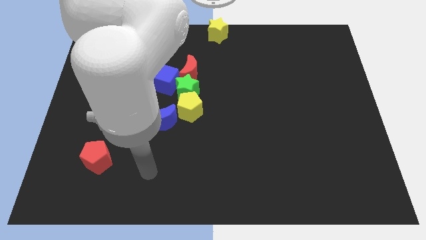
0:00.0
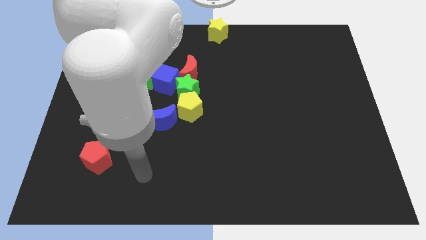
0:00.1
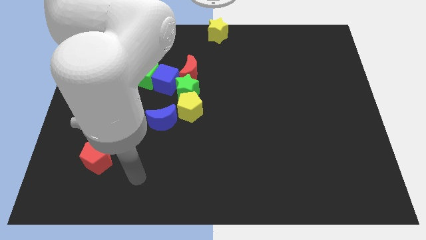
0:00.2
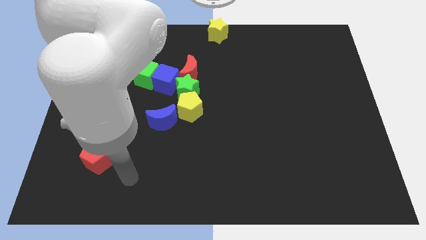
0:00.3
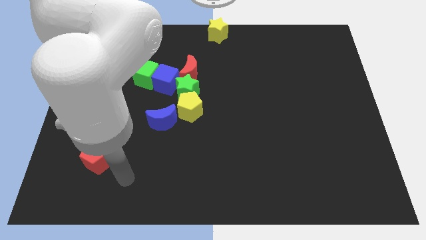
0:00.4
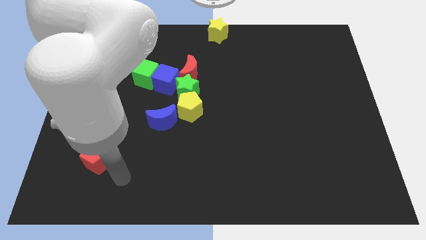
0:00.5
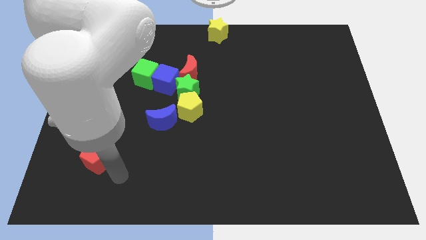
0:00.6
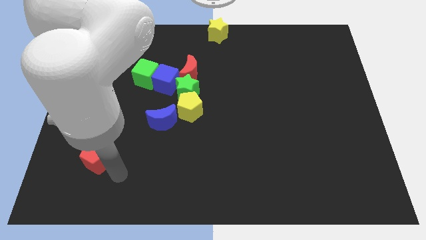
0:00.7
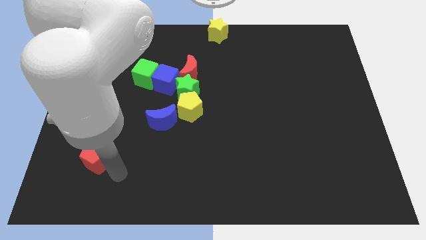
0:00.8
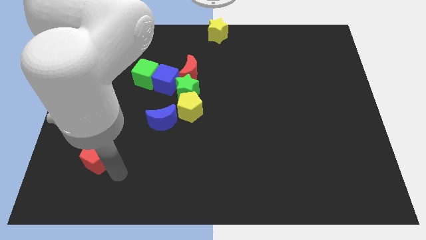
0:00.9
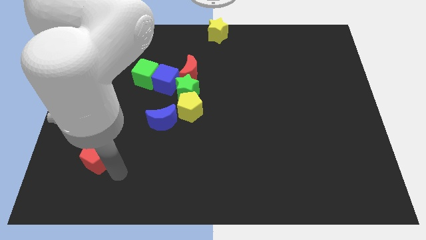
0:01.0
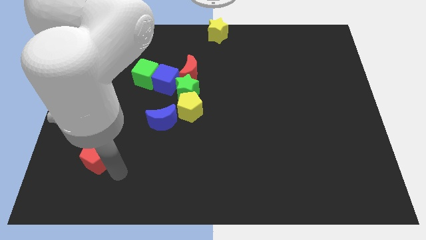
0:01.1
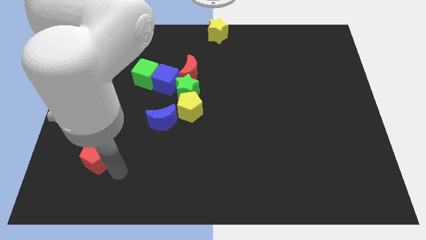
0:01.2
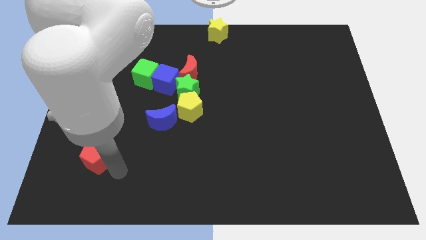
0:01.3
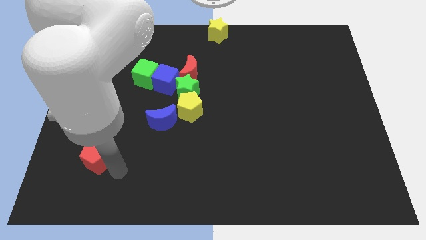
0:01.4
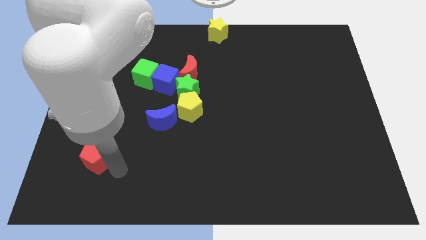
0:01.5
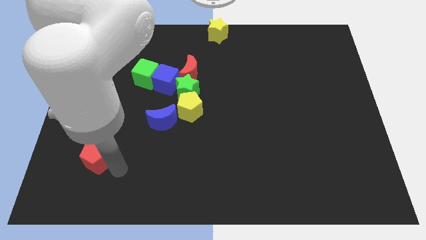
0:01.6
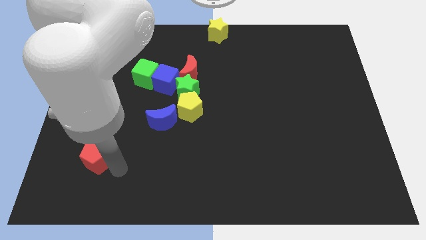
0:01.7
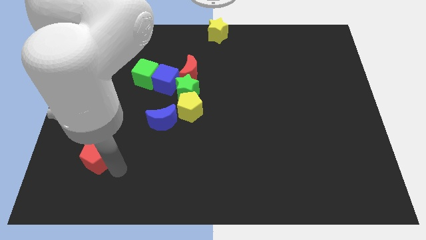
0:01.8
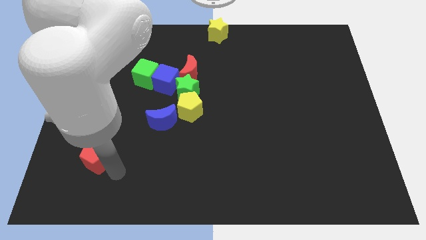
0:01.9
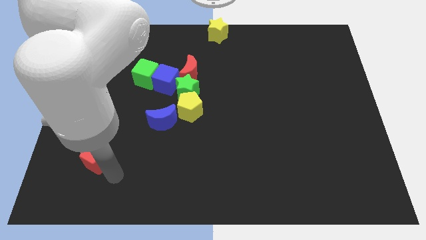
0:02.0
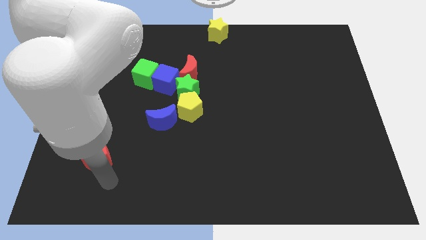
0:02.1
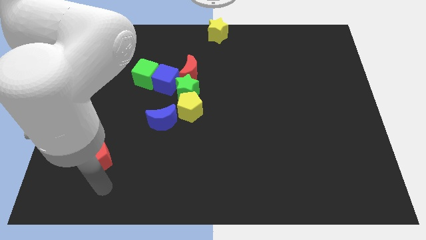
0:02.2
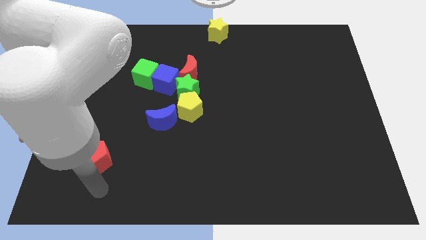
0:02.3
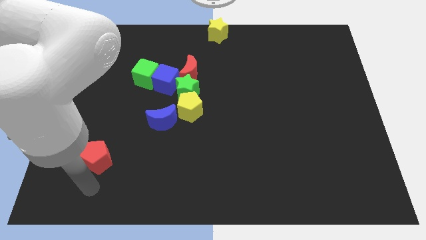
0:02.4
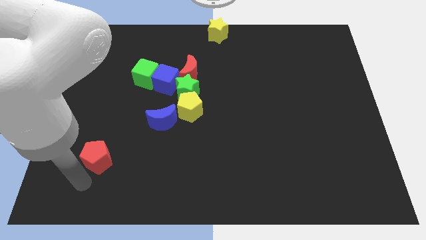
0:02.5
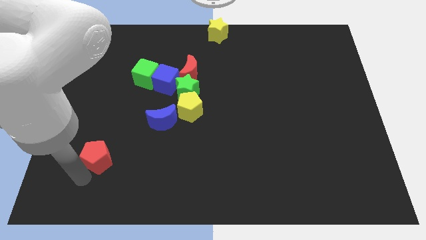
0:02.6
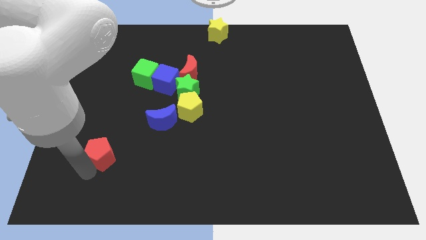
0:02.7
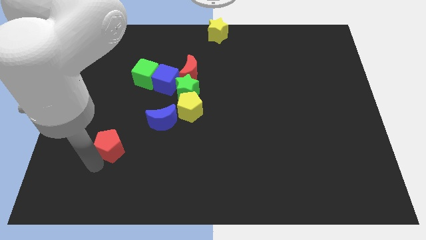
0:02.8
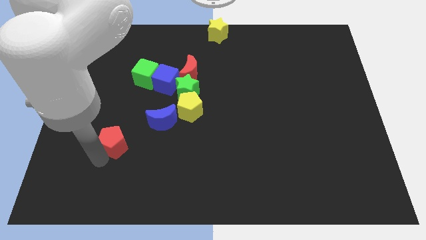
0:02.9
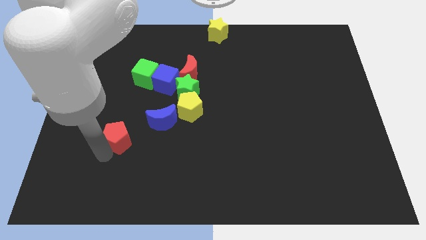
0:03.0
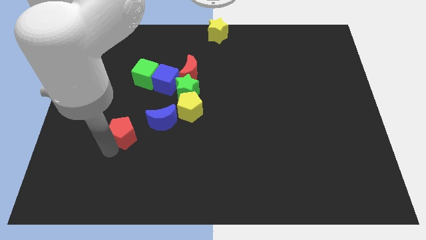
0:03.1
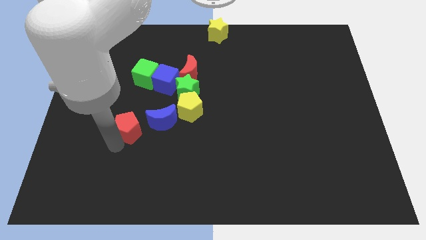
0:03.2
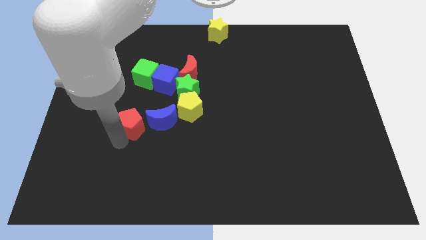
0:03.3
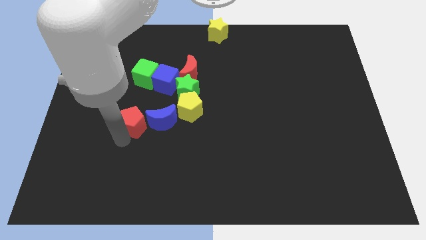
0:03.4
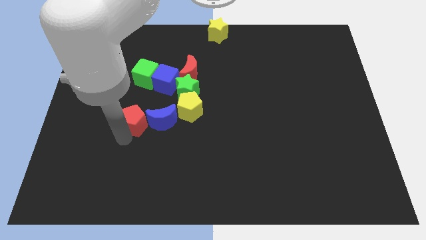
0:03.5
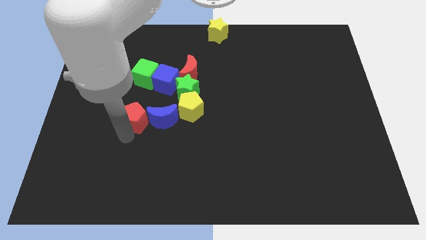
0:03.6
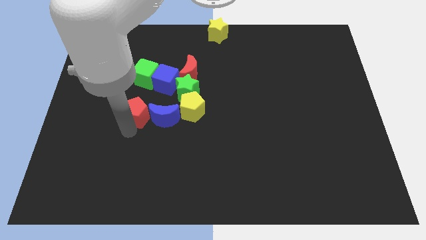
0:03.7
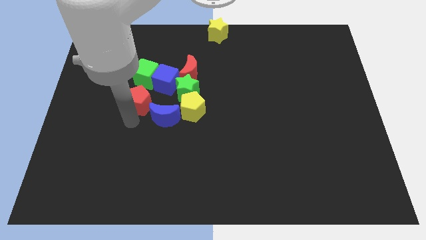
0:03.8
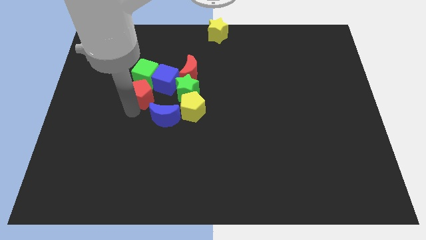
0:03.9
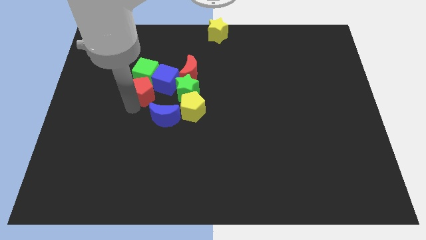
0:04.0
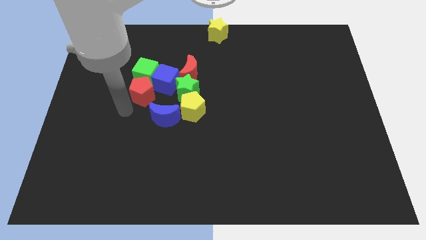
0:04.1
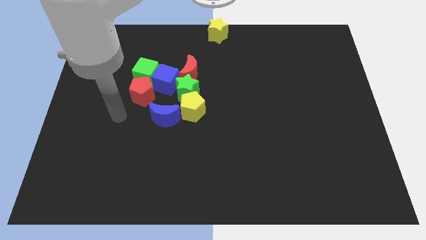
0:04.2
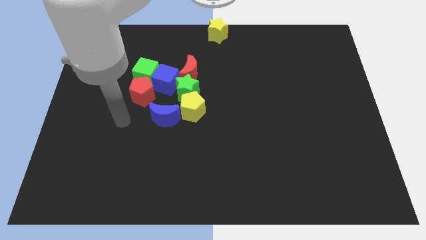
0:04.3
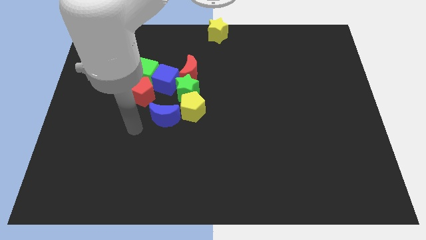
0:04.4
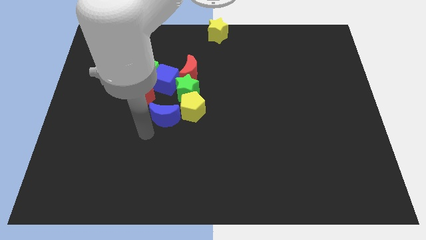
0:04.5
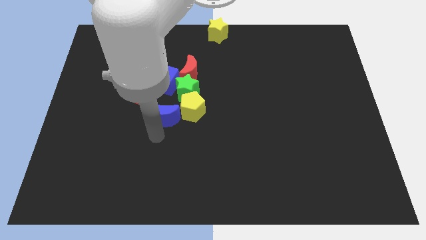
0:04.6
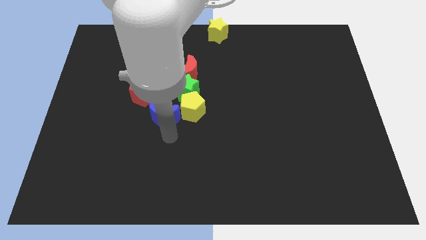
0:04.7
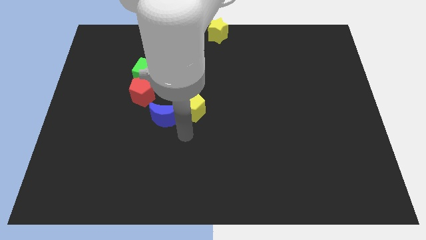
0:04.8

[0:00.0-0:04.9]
move the red pentagon below the green cube and blue cube

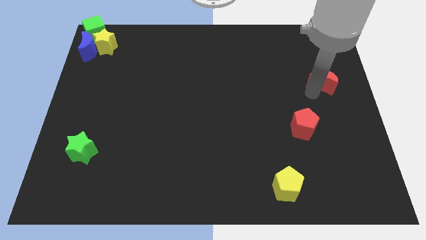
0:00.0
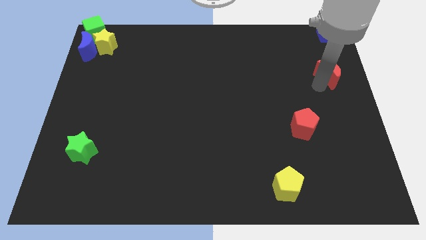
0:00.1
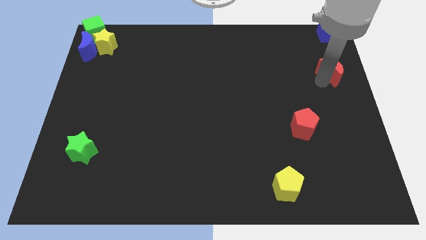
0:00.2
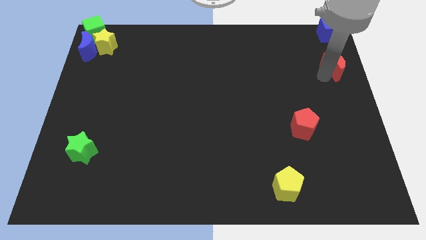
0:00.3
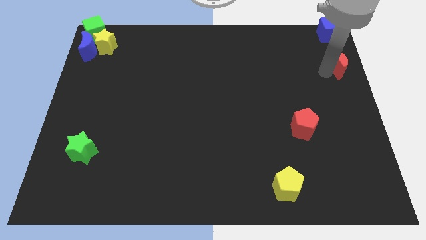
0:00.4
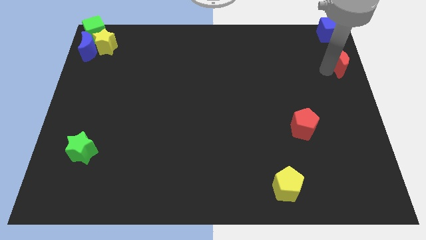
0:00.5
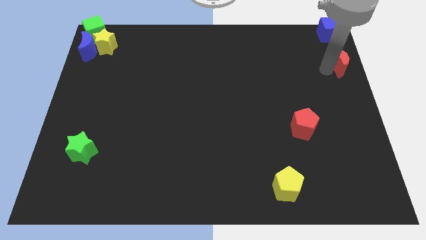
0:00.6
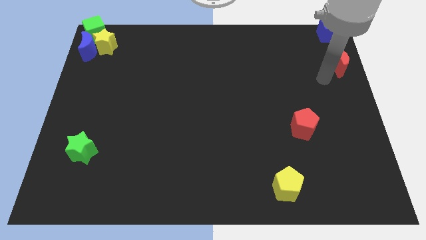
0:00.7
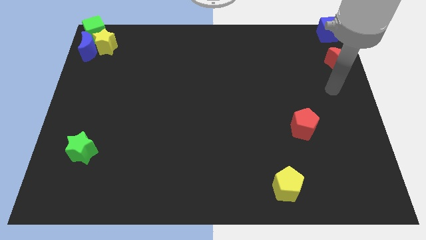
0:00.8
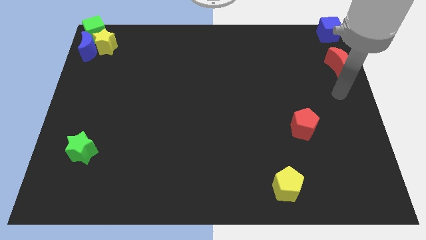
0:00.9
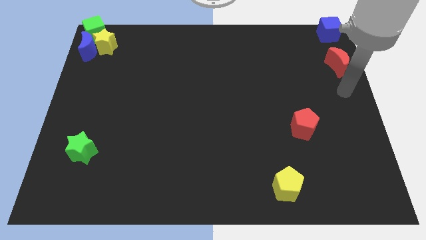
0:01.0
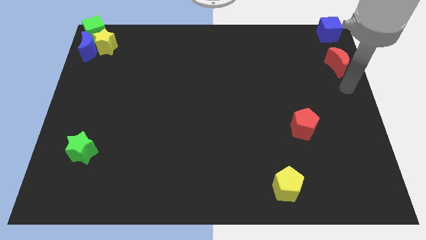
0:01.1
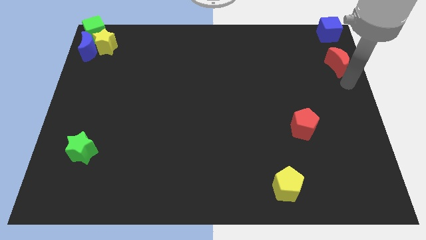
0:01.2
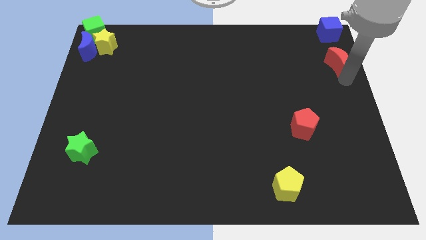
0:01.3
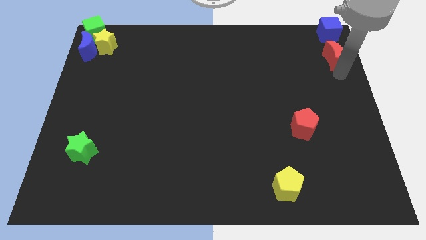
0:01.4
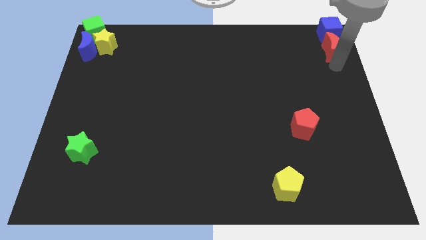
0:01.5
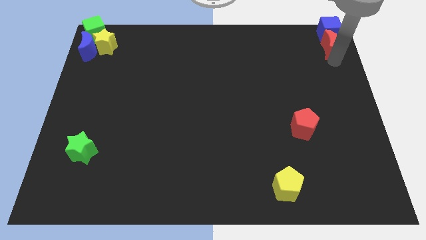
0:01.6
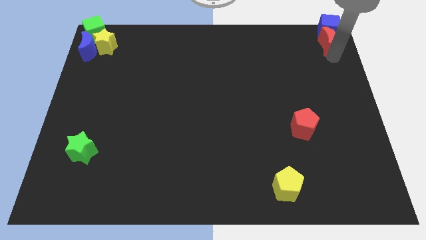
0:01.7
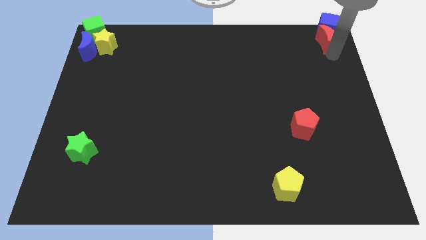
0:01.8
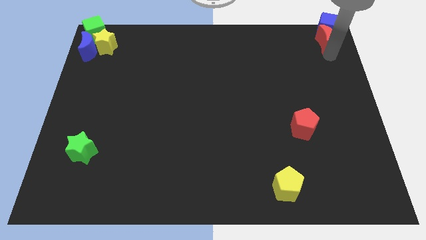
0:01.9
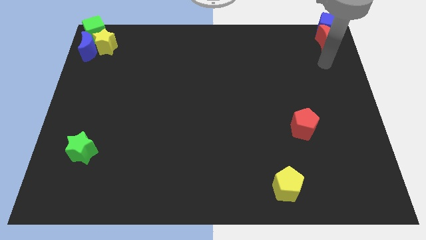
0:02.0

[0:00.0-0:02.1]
place the red crescent at the bottom of the blue cube

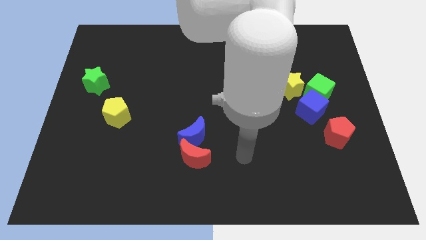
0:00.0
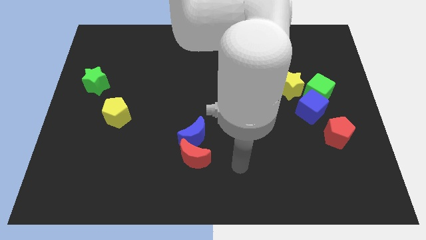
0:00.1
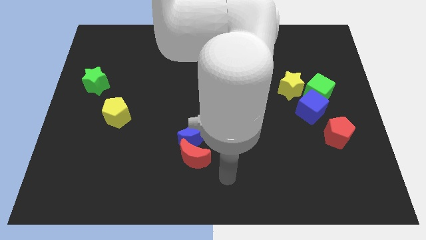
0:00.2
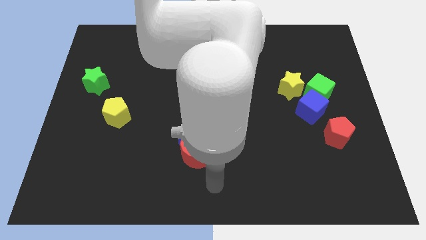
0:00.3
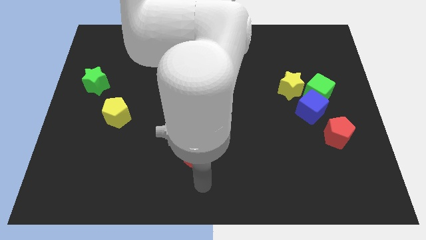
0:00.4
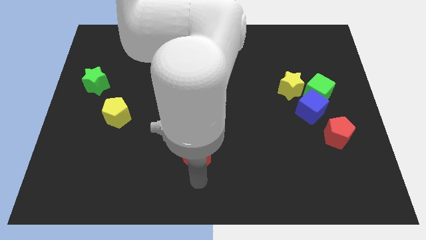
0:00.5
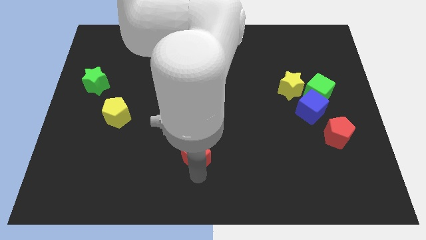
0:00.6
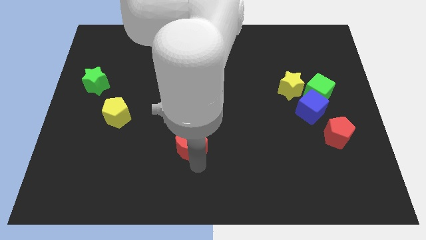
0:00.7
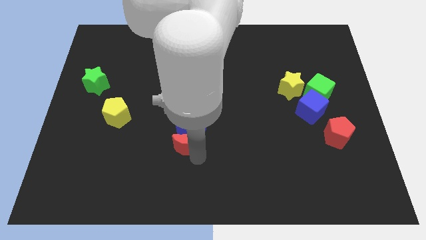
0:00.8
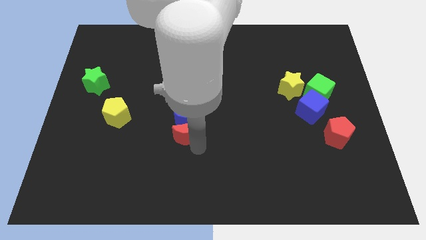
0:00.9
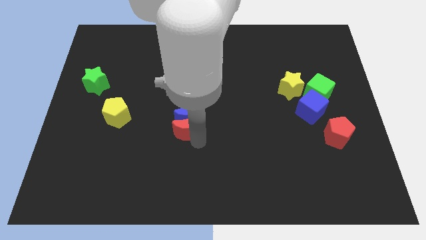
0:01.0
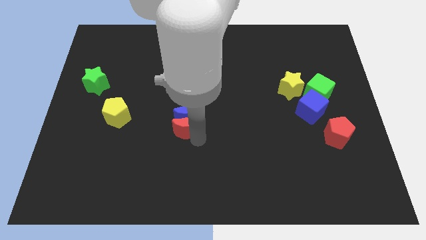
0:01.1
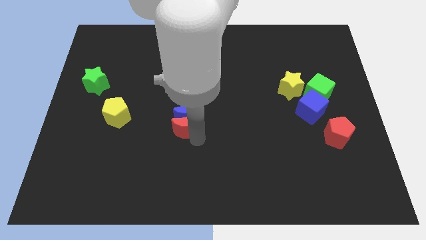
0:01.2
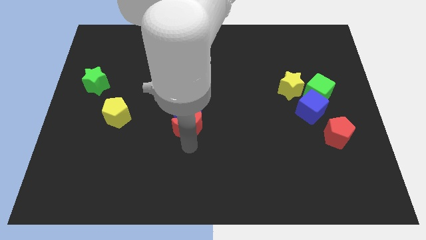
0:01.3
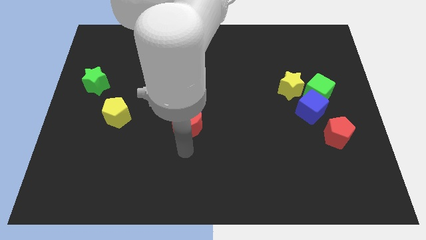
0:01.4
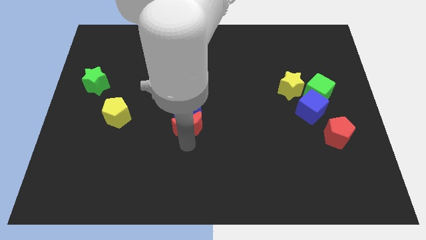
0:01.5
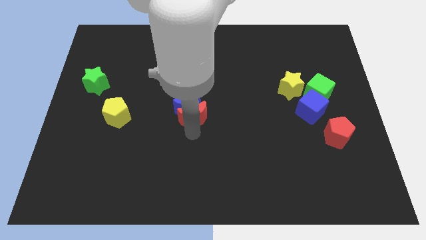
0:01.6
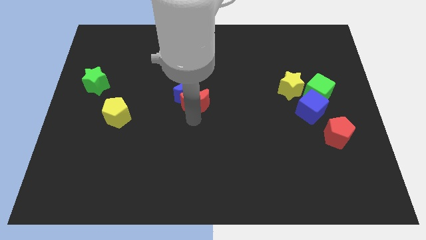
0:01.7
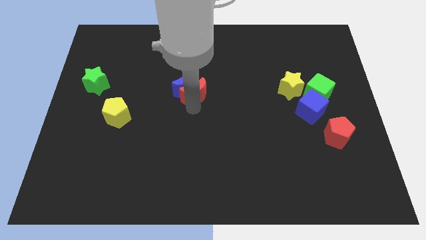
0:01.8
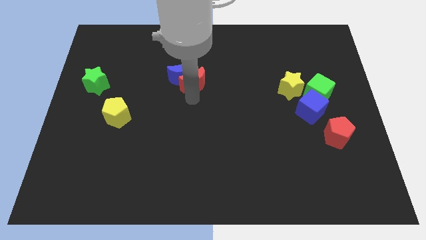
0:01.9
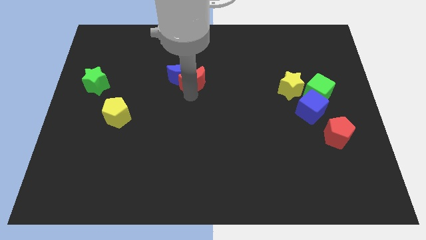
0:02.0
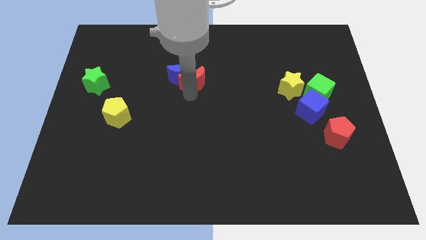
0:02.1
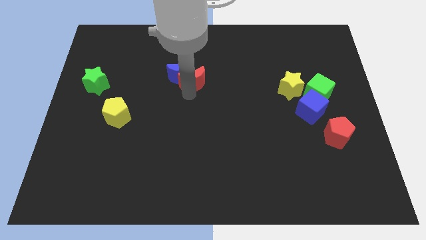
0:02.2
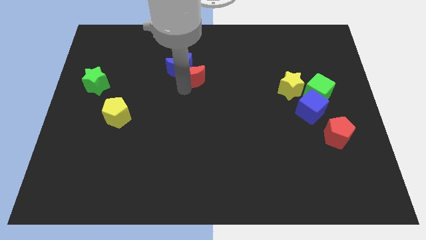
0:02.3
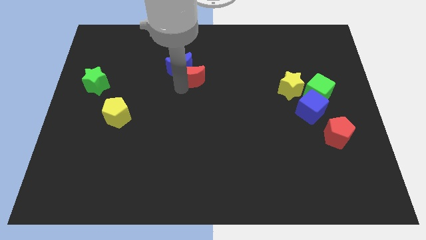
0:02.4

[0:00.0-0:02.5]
push blue moon and red moon to the top
